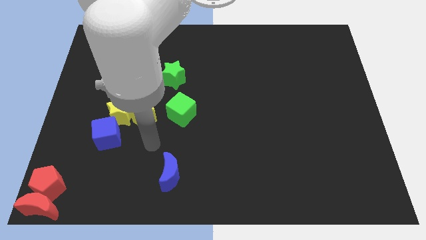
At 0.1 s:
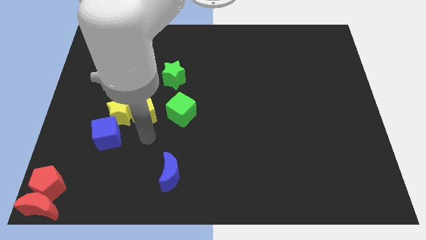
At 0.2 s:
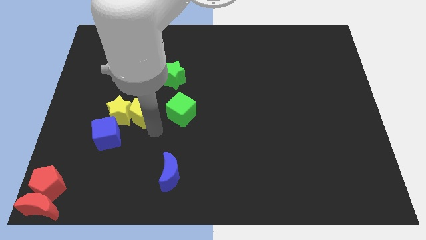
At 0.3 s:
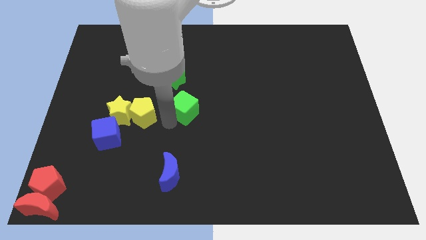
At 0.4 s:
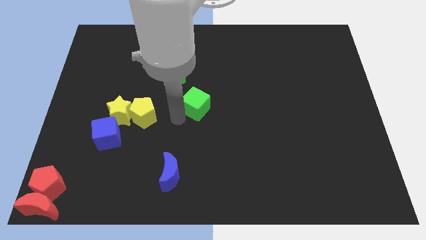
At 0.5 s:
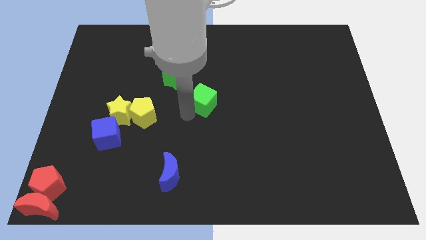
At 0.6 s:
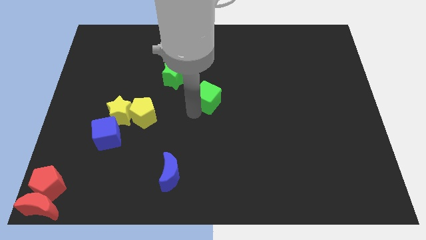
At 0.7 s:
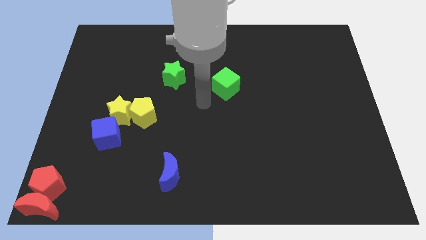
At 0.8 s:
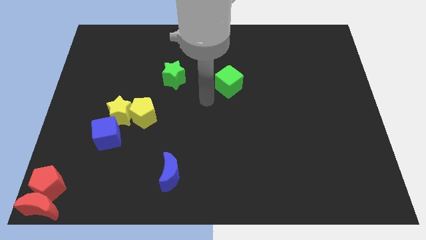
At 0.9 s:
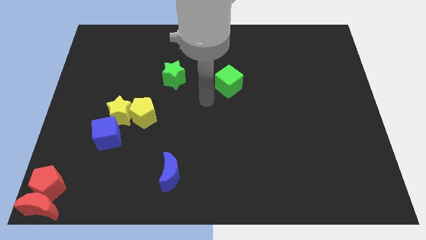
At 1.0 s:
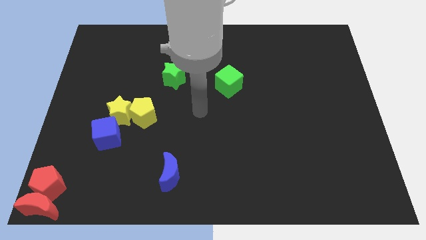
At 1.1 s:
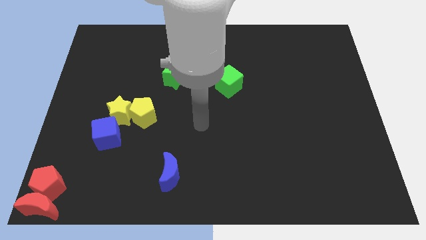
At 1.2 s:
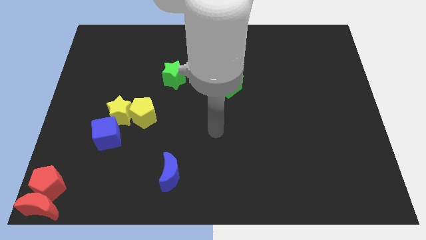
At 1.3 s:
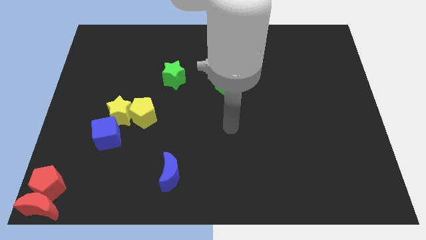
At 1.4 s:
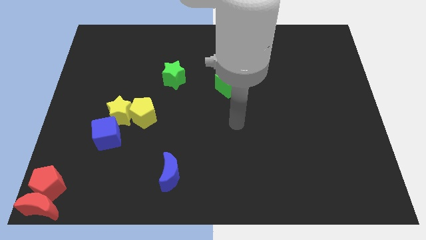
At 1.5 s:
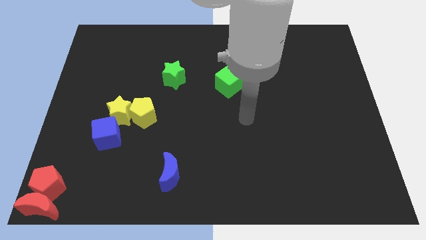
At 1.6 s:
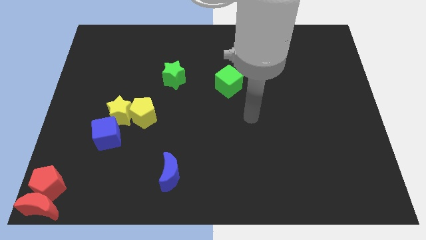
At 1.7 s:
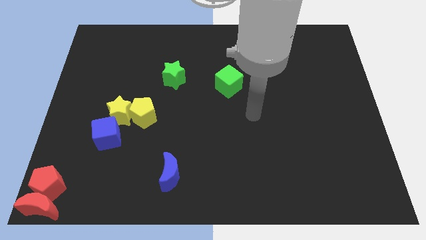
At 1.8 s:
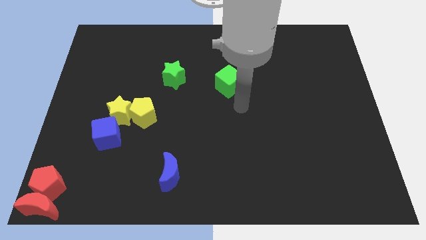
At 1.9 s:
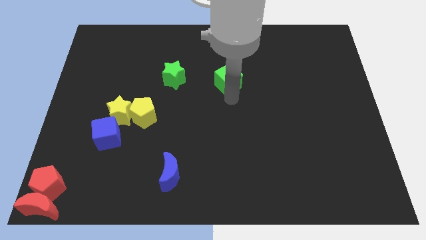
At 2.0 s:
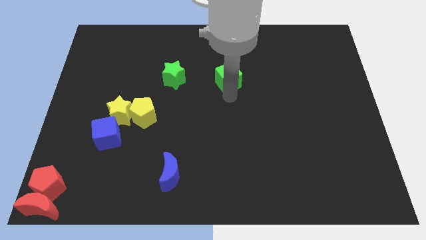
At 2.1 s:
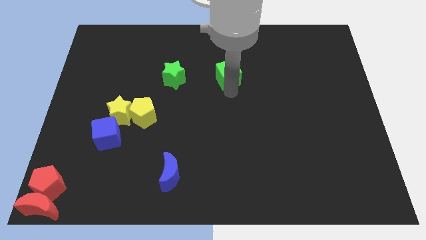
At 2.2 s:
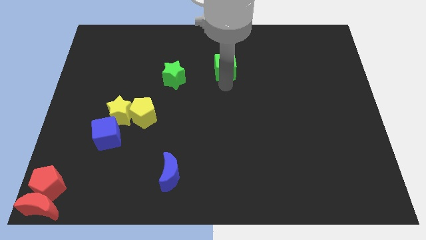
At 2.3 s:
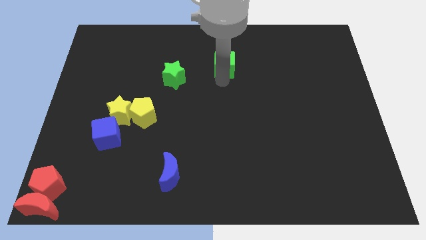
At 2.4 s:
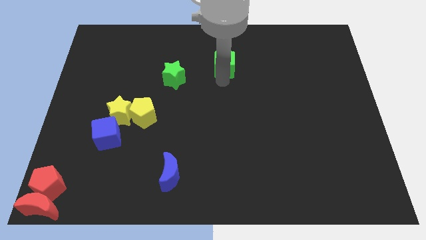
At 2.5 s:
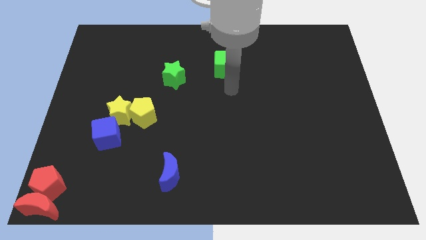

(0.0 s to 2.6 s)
move the green cube diagonally top right to green star

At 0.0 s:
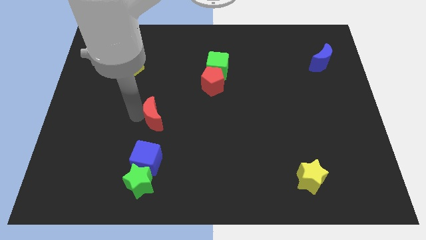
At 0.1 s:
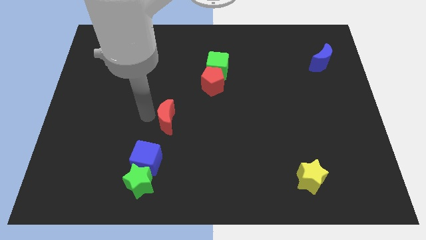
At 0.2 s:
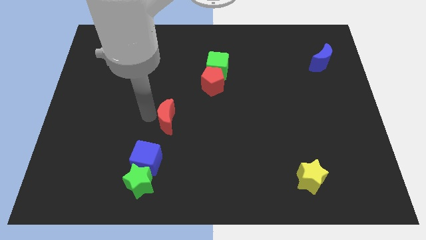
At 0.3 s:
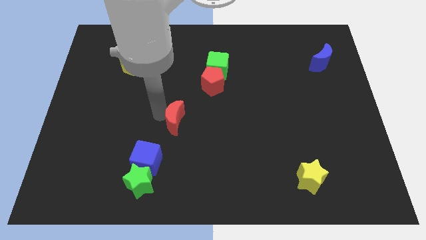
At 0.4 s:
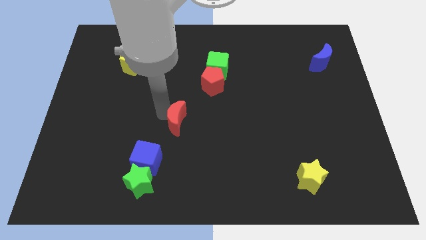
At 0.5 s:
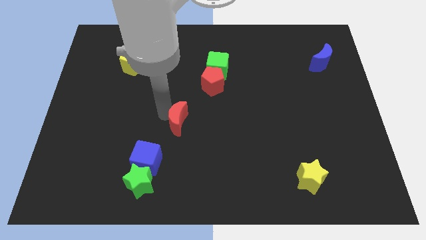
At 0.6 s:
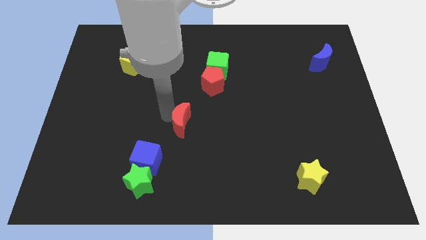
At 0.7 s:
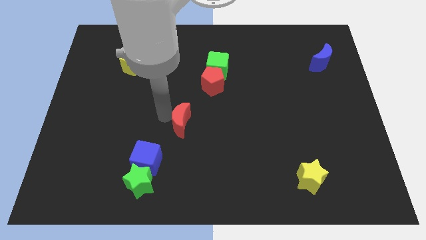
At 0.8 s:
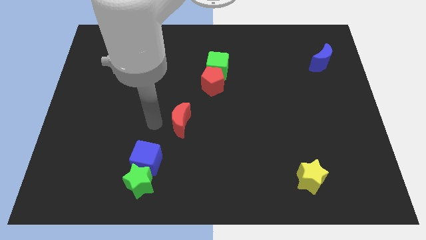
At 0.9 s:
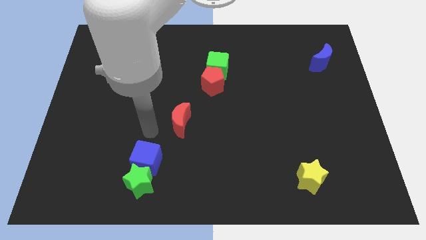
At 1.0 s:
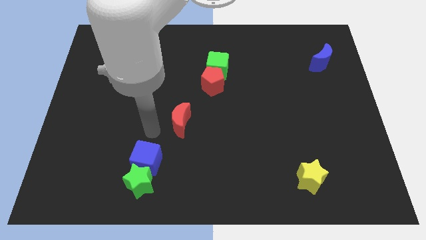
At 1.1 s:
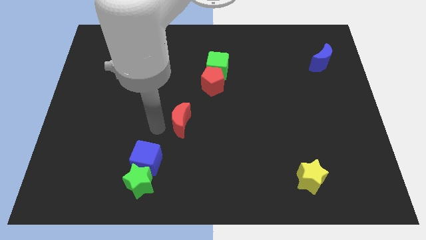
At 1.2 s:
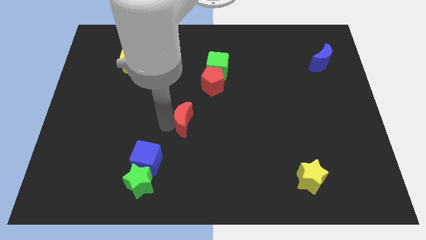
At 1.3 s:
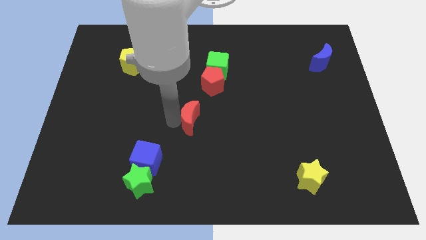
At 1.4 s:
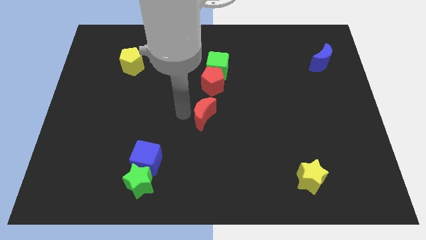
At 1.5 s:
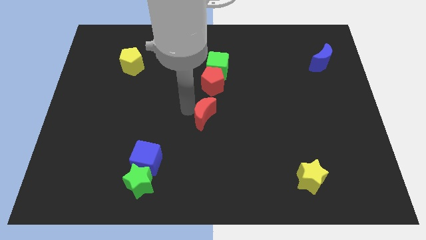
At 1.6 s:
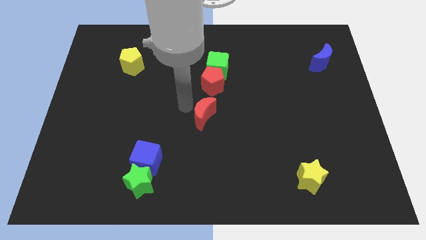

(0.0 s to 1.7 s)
place the red crescent below the red pentagon

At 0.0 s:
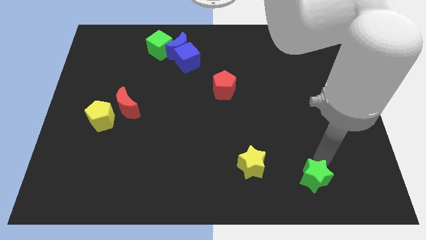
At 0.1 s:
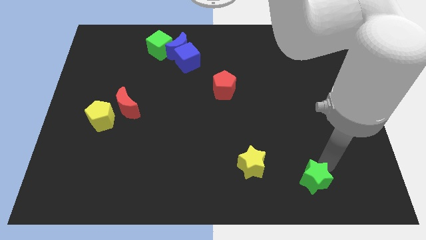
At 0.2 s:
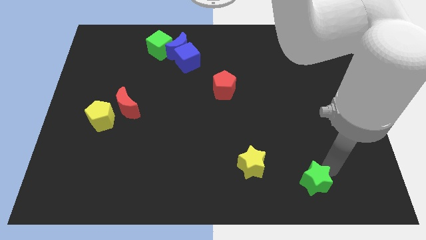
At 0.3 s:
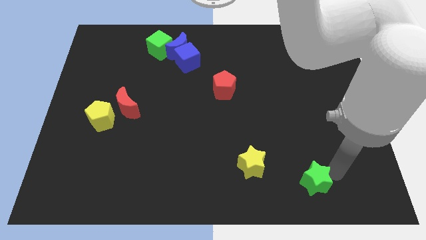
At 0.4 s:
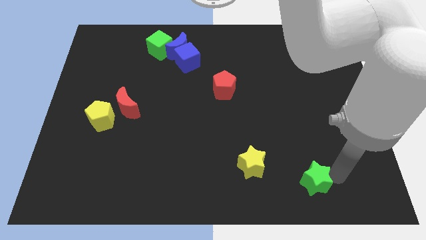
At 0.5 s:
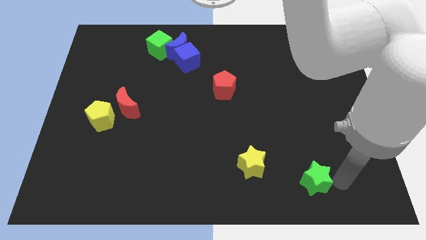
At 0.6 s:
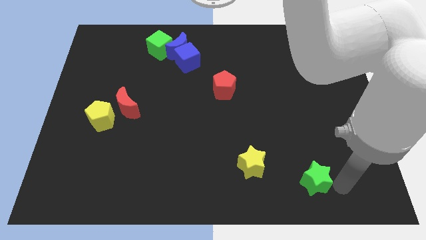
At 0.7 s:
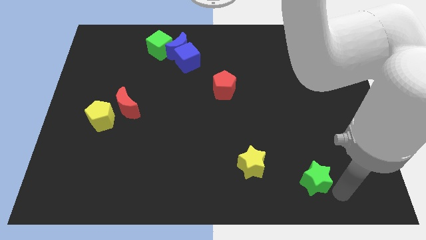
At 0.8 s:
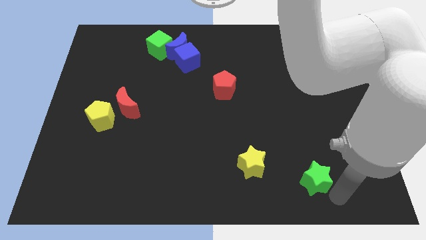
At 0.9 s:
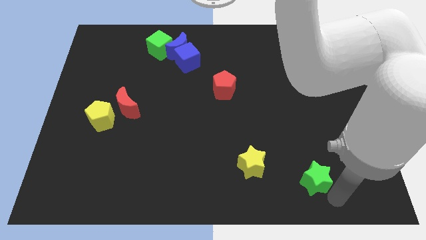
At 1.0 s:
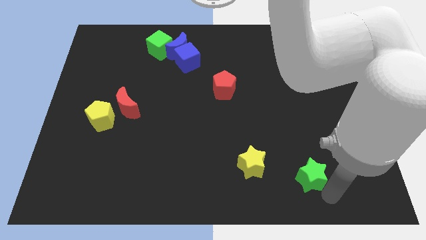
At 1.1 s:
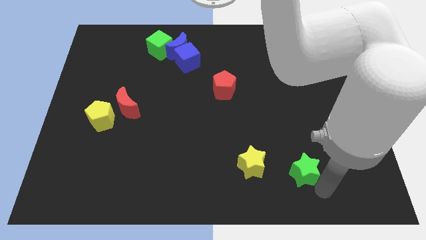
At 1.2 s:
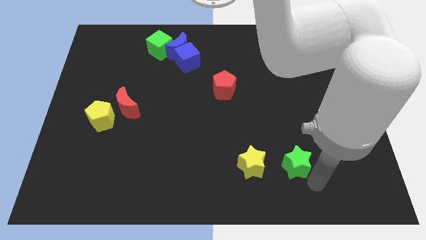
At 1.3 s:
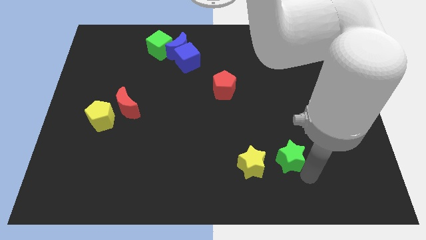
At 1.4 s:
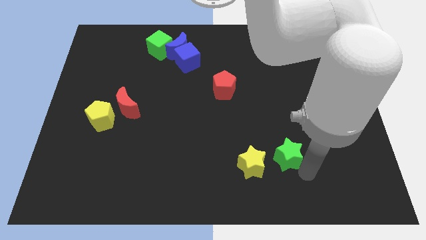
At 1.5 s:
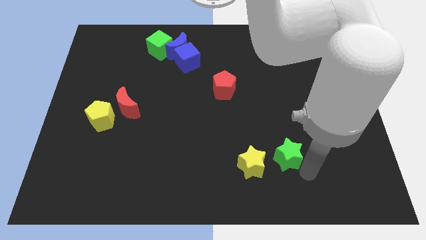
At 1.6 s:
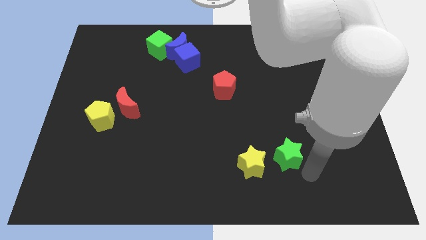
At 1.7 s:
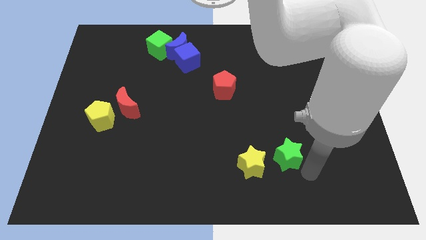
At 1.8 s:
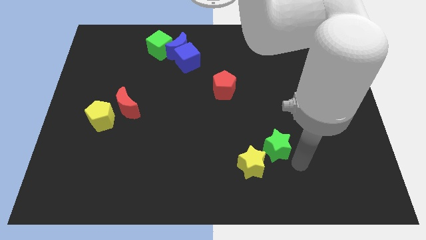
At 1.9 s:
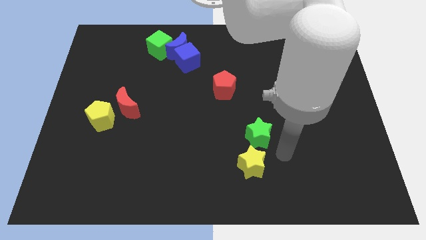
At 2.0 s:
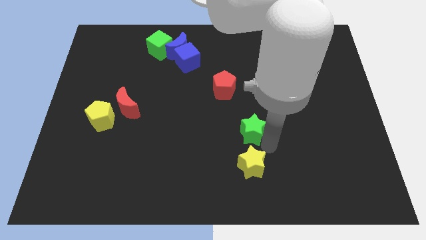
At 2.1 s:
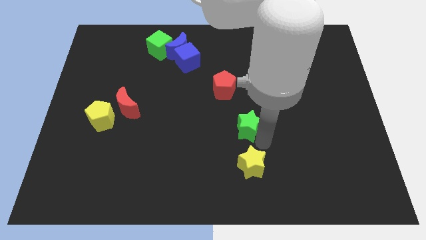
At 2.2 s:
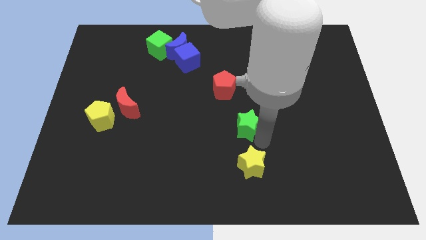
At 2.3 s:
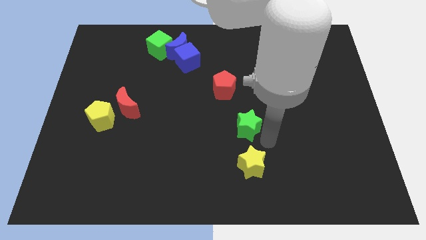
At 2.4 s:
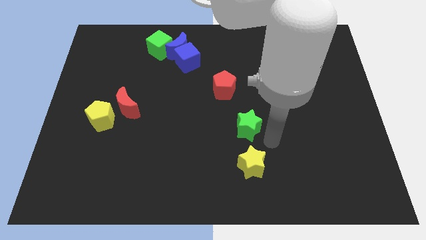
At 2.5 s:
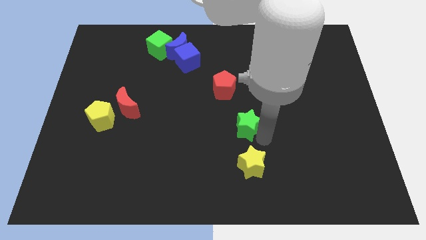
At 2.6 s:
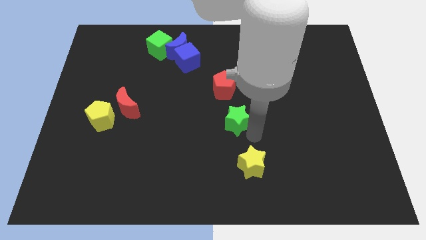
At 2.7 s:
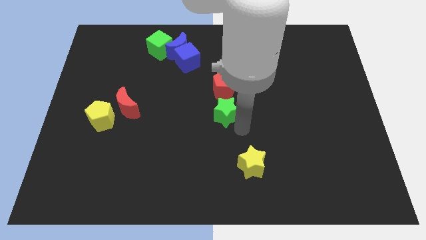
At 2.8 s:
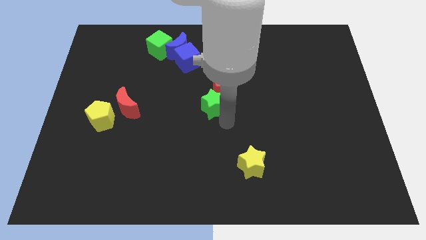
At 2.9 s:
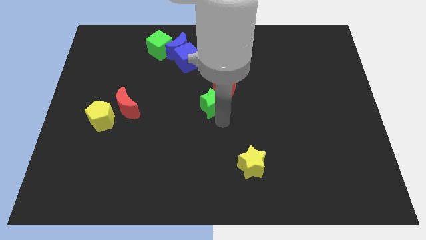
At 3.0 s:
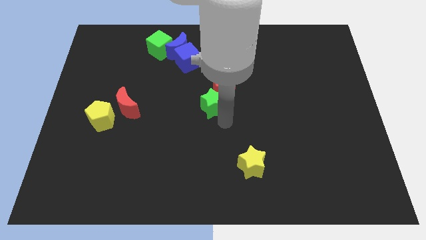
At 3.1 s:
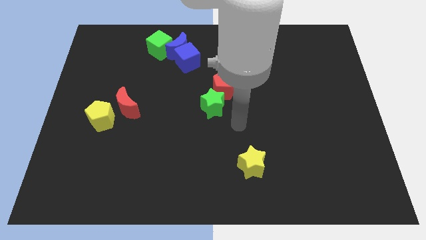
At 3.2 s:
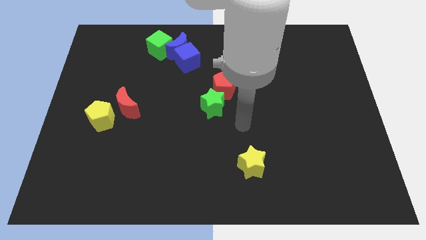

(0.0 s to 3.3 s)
place the green star at center of the board

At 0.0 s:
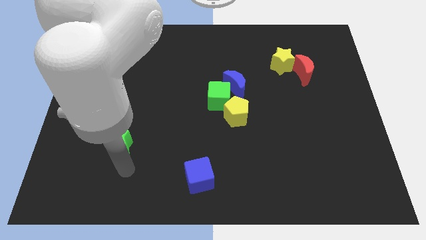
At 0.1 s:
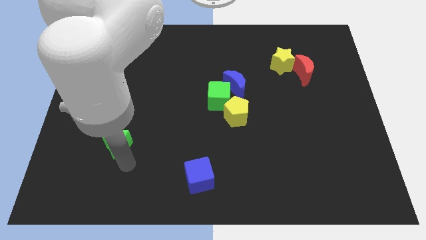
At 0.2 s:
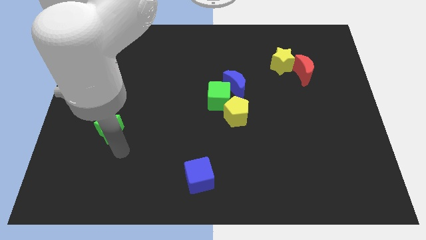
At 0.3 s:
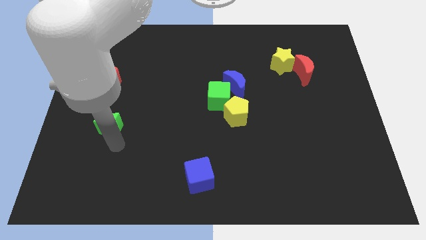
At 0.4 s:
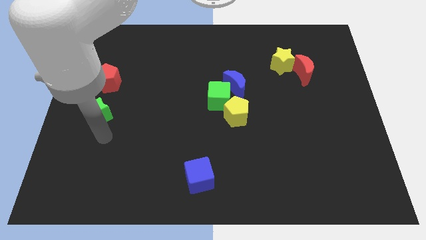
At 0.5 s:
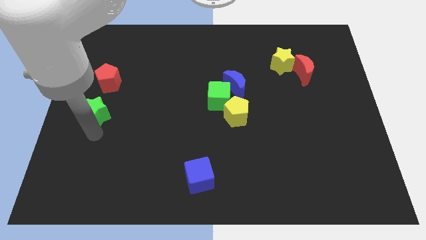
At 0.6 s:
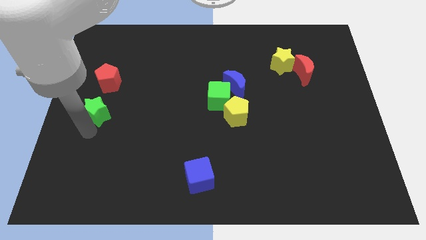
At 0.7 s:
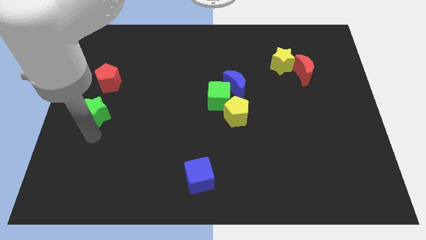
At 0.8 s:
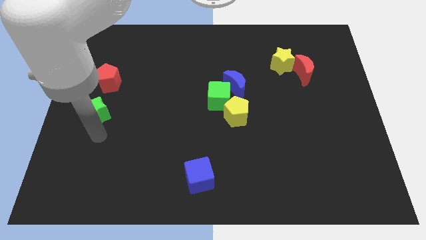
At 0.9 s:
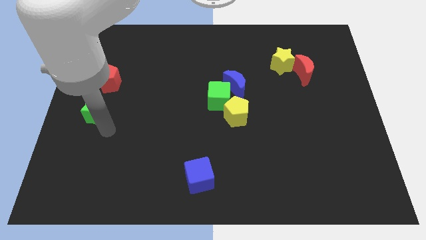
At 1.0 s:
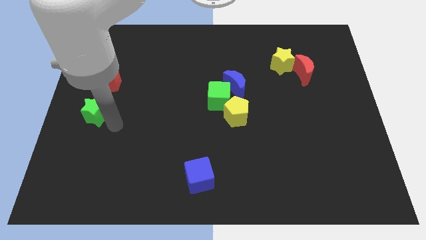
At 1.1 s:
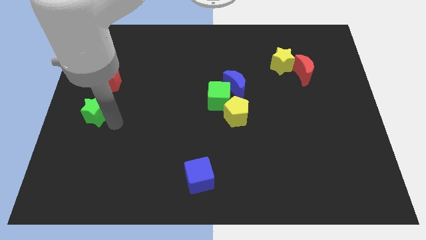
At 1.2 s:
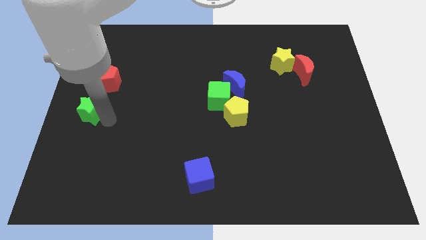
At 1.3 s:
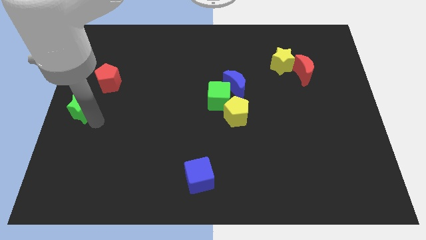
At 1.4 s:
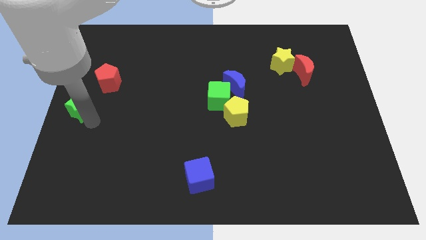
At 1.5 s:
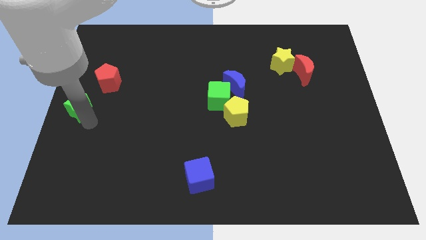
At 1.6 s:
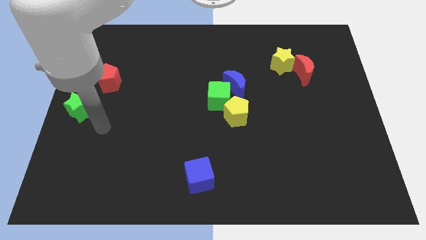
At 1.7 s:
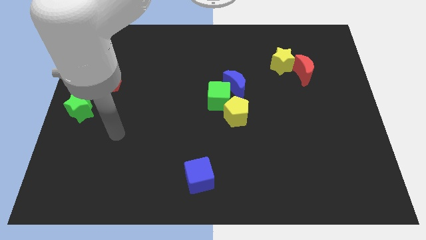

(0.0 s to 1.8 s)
move green star diagonally on the bottom left side of the red pentagon
